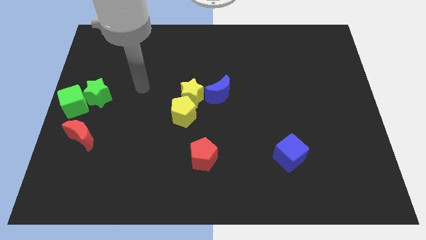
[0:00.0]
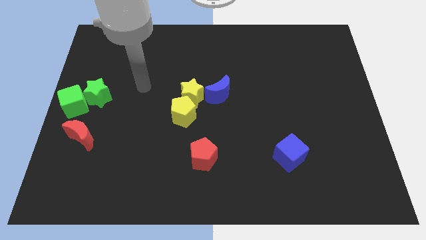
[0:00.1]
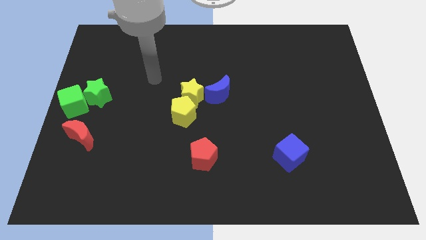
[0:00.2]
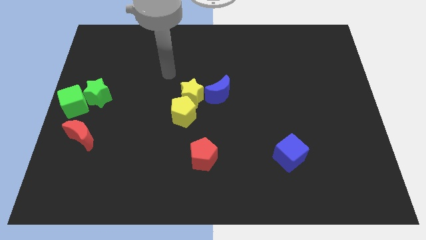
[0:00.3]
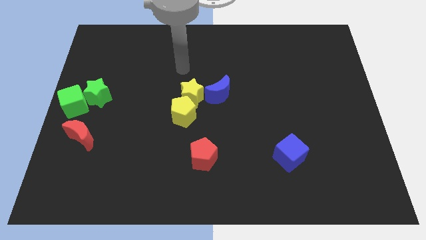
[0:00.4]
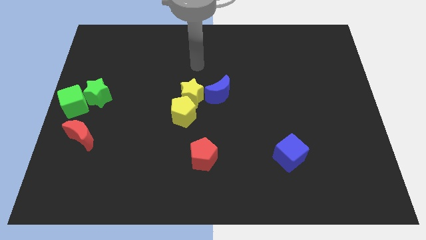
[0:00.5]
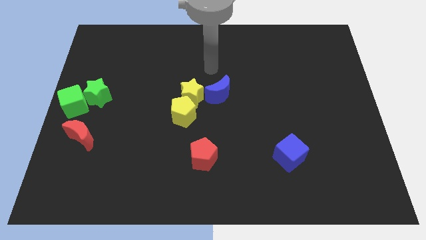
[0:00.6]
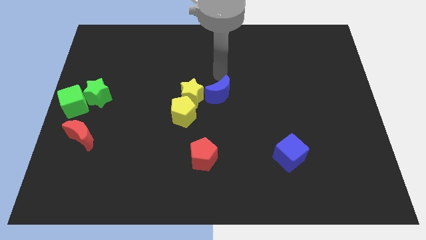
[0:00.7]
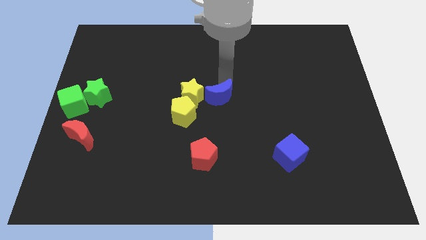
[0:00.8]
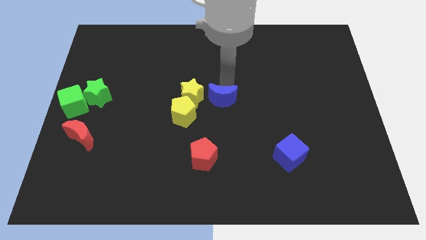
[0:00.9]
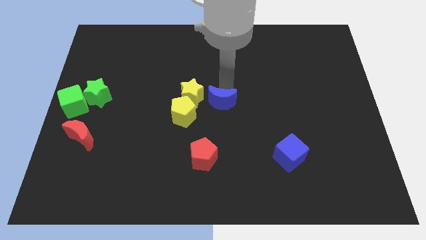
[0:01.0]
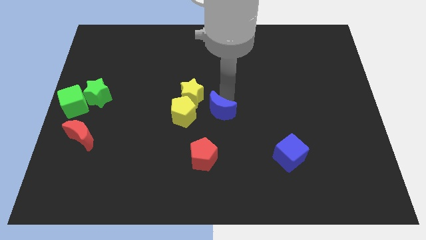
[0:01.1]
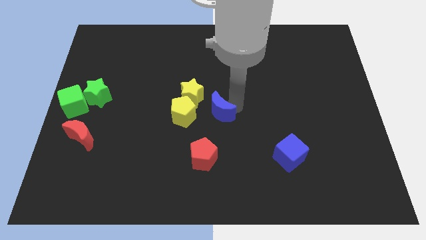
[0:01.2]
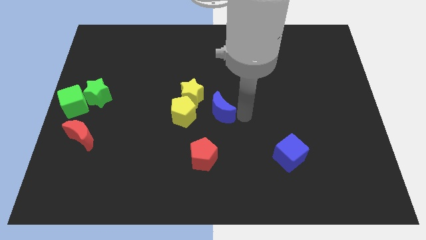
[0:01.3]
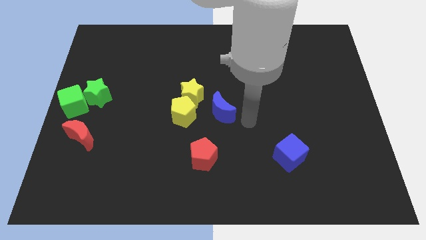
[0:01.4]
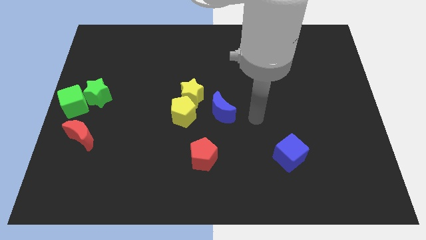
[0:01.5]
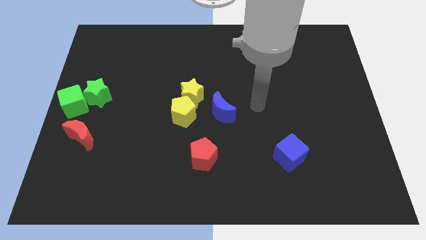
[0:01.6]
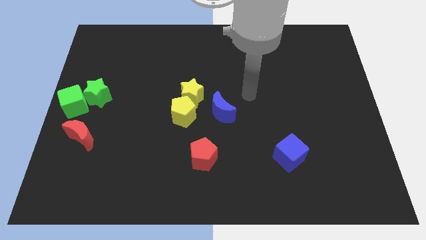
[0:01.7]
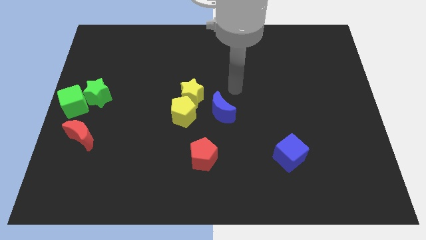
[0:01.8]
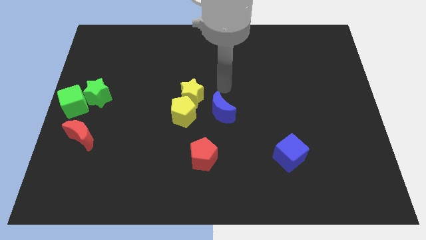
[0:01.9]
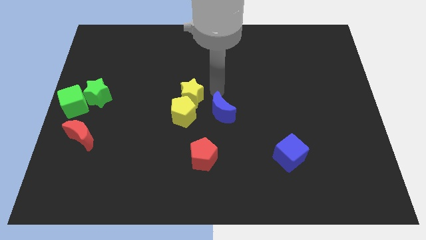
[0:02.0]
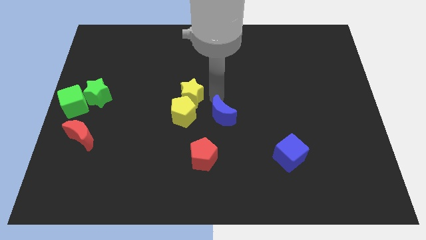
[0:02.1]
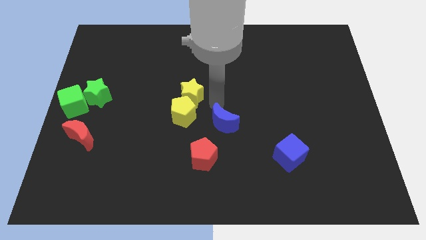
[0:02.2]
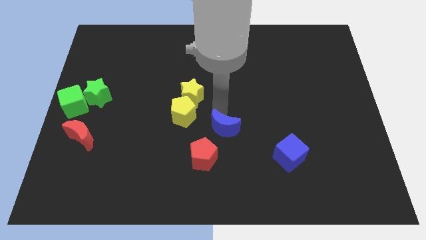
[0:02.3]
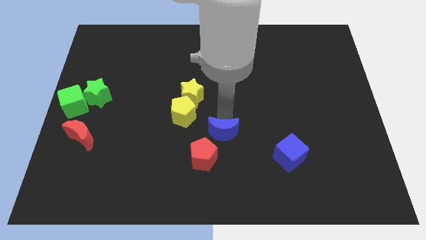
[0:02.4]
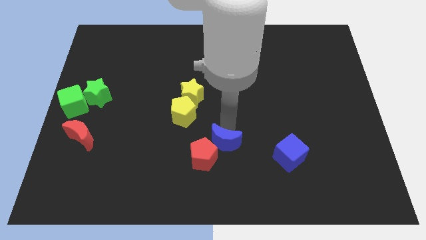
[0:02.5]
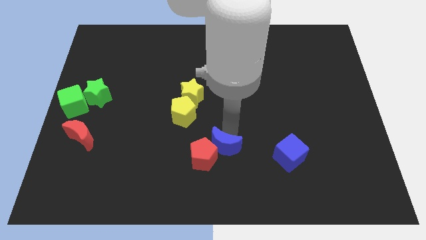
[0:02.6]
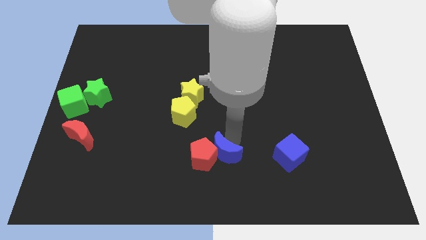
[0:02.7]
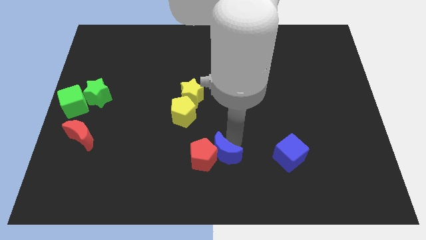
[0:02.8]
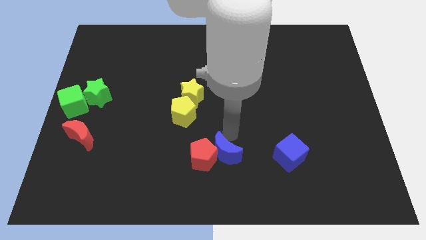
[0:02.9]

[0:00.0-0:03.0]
put the blue moon diagonally top right to the red pentagon

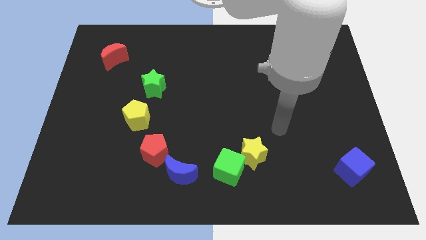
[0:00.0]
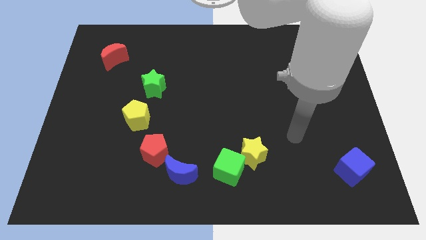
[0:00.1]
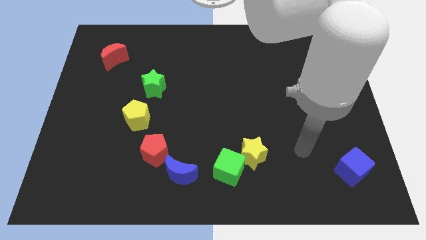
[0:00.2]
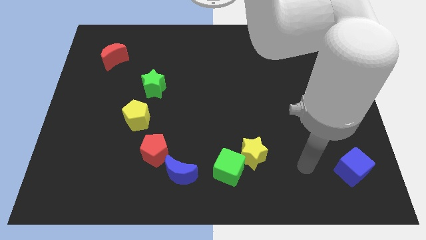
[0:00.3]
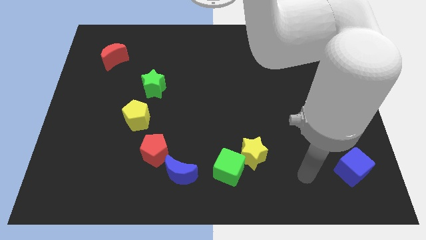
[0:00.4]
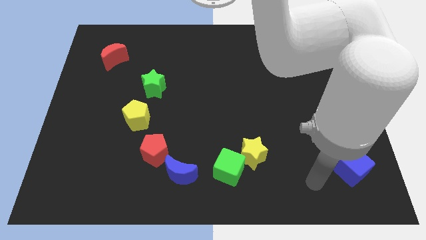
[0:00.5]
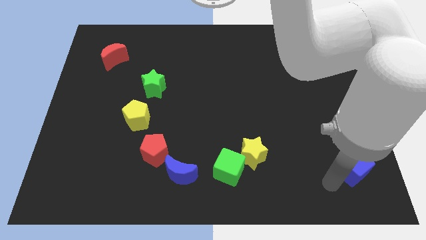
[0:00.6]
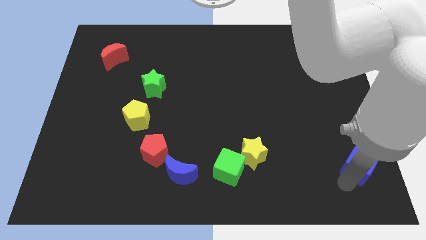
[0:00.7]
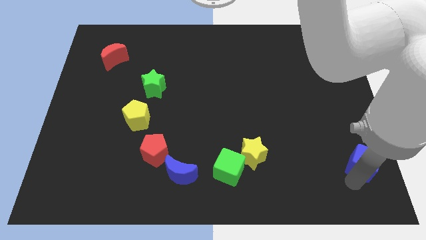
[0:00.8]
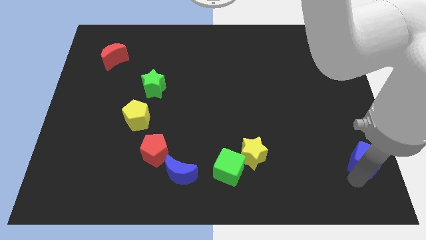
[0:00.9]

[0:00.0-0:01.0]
slightly push the blue cube towards the right side of the board

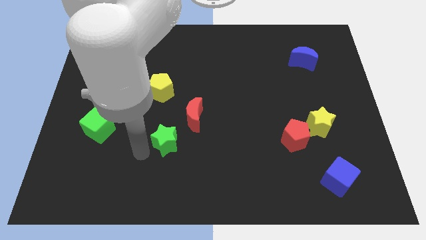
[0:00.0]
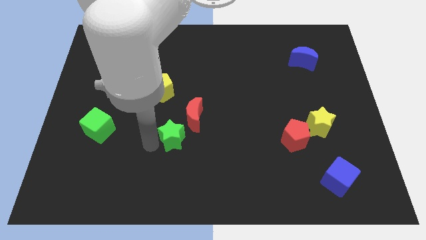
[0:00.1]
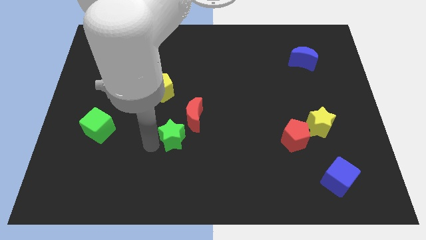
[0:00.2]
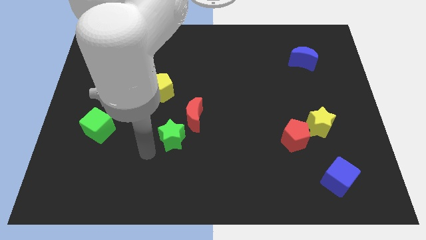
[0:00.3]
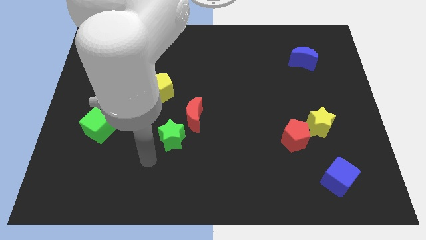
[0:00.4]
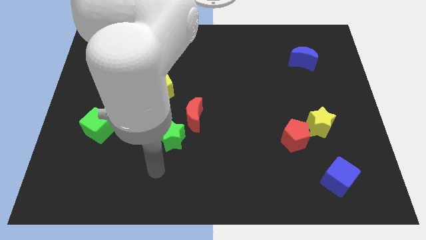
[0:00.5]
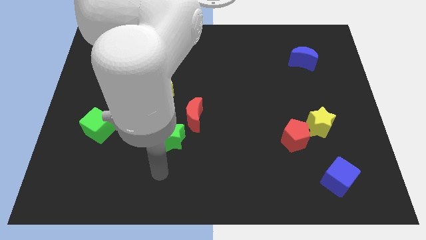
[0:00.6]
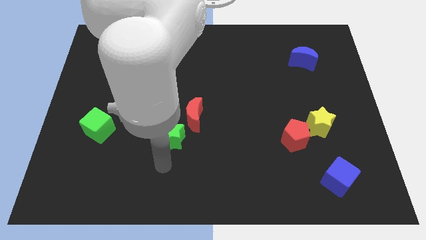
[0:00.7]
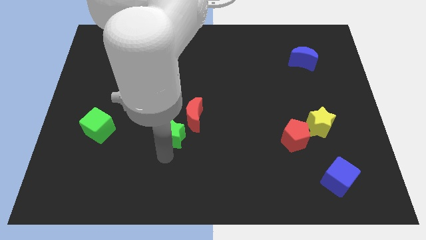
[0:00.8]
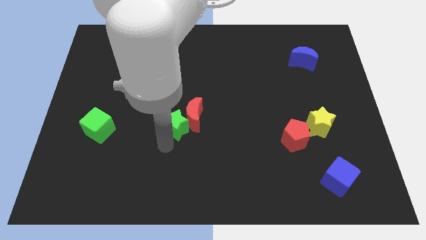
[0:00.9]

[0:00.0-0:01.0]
push the green star into the red crescent

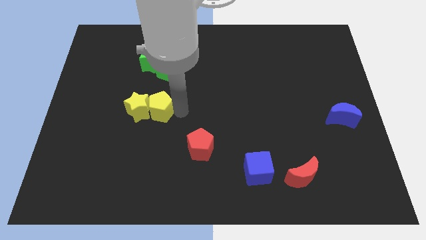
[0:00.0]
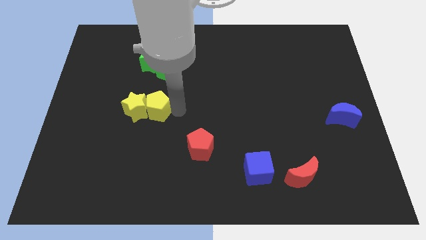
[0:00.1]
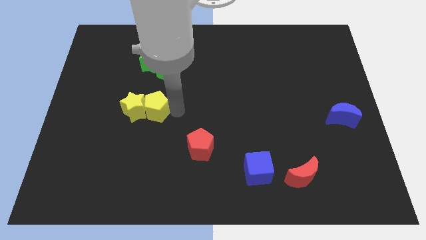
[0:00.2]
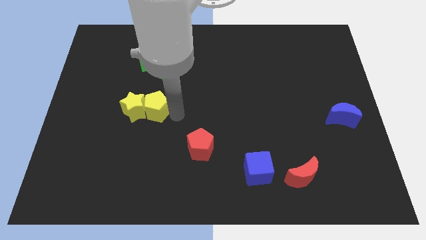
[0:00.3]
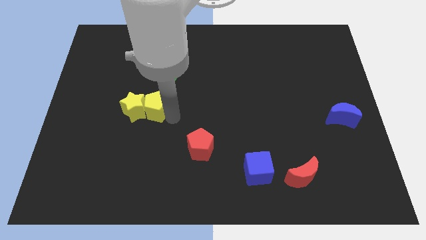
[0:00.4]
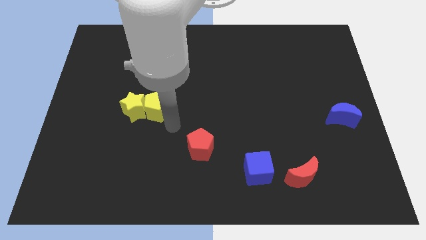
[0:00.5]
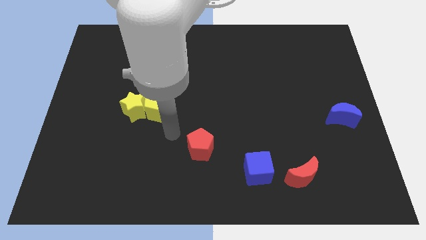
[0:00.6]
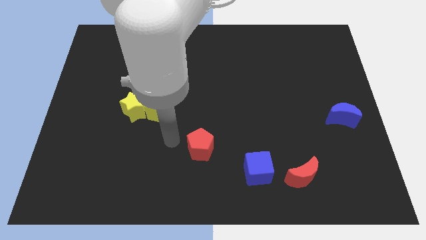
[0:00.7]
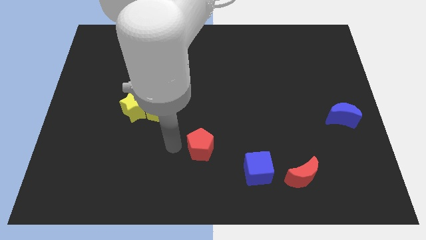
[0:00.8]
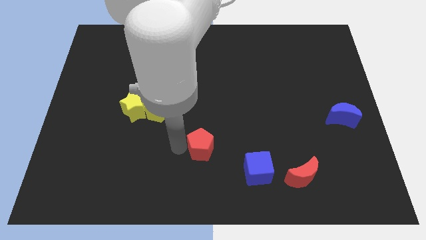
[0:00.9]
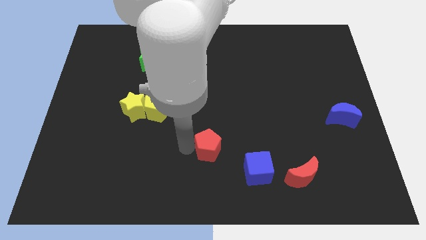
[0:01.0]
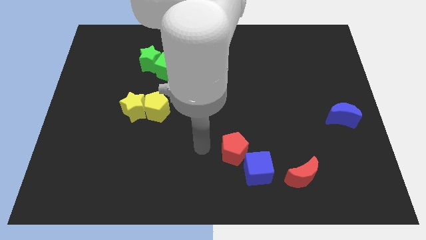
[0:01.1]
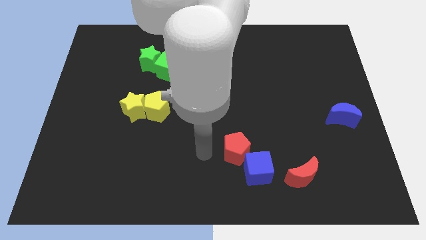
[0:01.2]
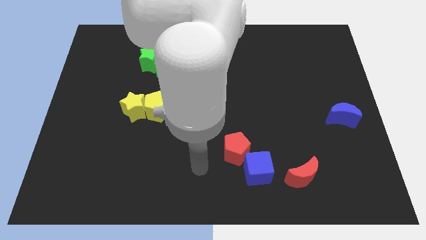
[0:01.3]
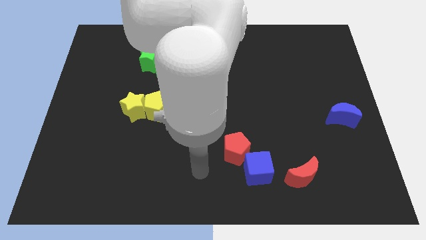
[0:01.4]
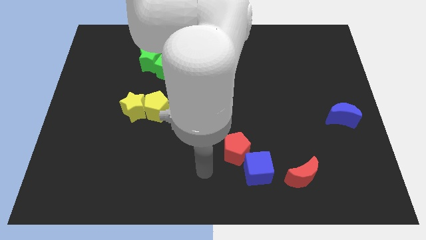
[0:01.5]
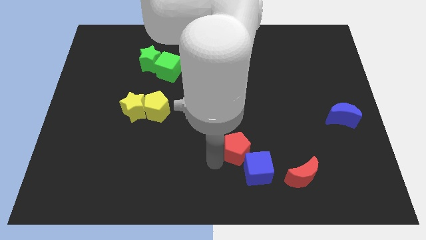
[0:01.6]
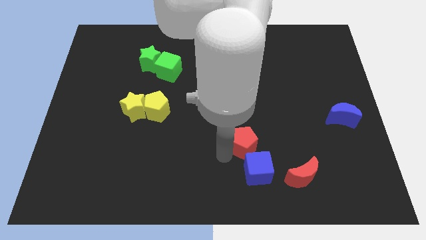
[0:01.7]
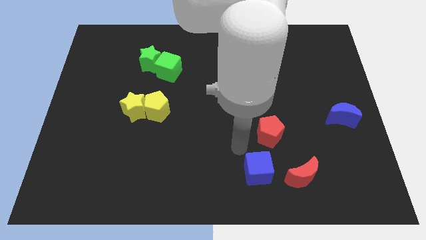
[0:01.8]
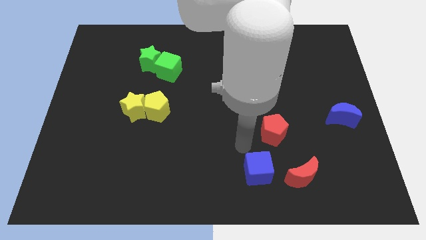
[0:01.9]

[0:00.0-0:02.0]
slide the red pentagon diagonally to green cube

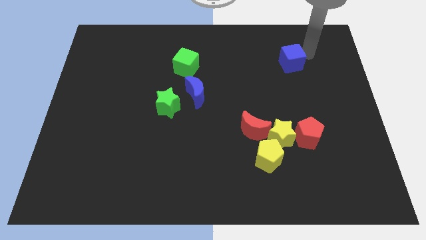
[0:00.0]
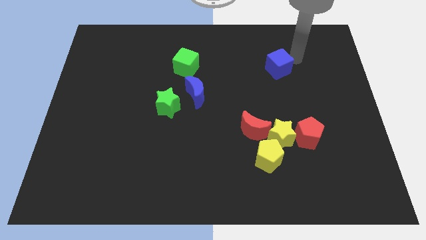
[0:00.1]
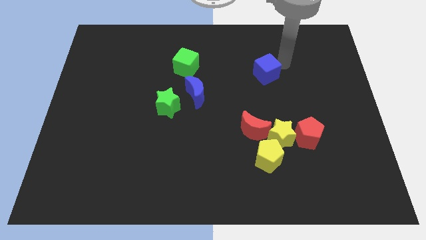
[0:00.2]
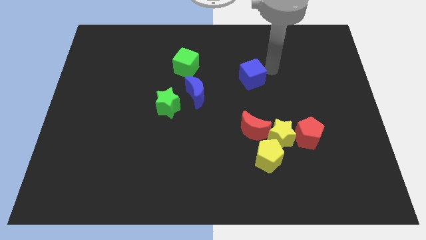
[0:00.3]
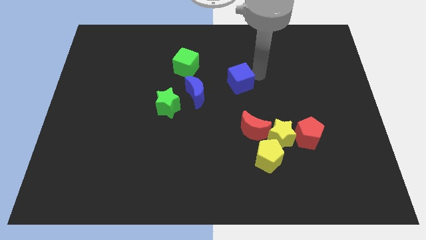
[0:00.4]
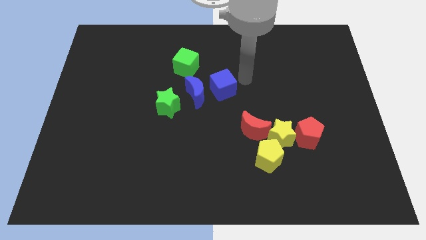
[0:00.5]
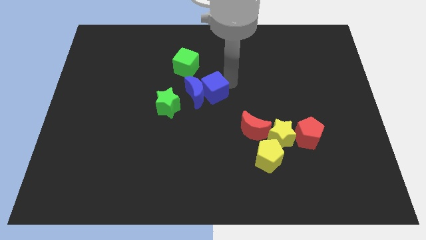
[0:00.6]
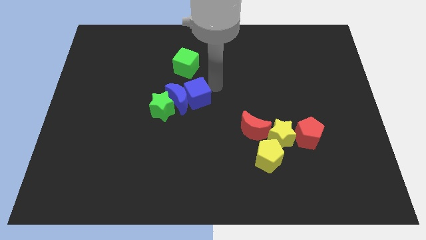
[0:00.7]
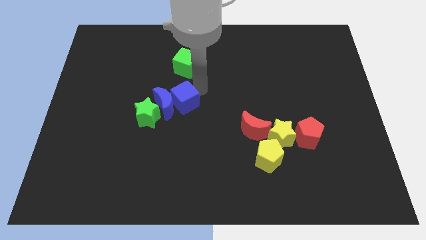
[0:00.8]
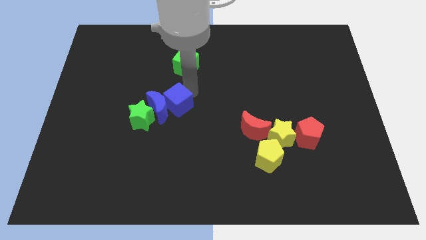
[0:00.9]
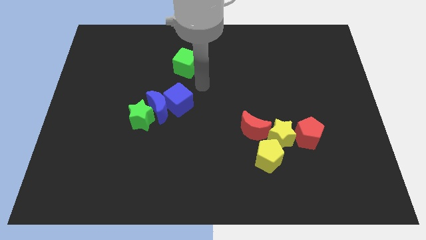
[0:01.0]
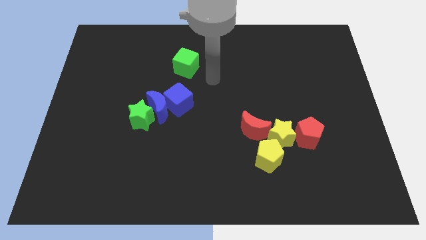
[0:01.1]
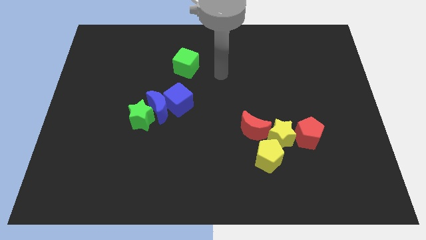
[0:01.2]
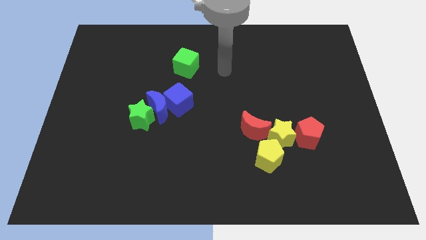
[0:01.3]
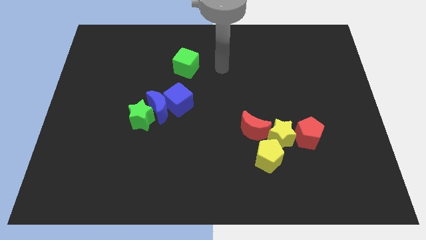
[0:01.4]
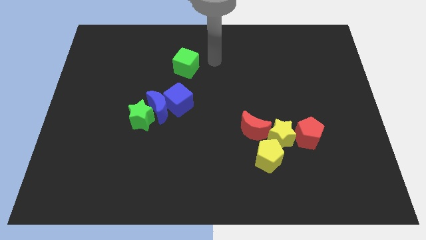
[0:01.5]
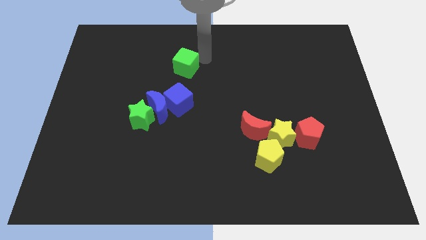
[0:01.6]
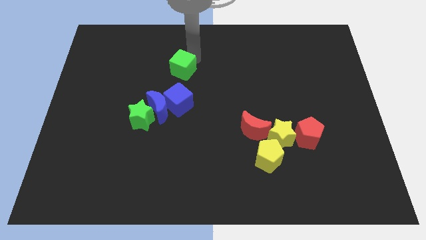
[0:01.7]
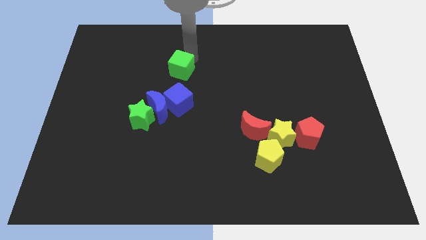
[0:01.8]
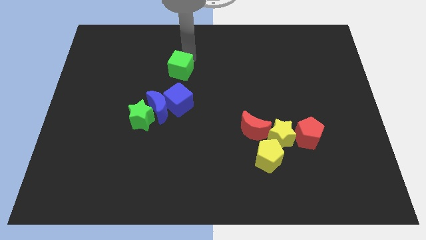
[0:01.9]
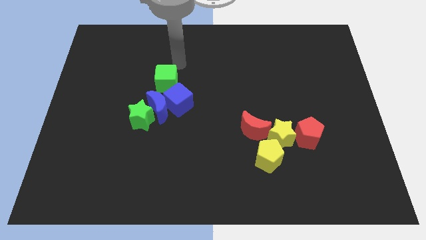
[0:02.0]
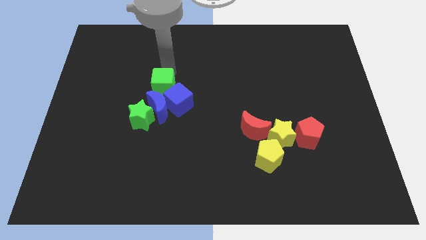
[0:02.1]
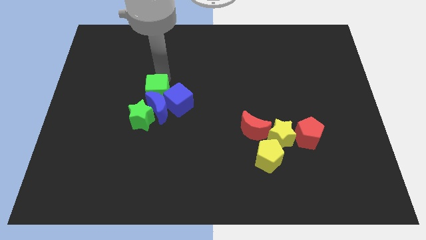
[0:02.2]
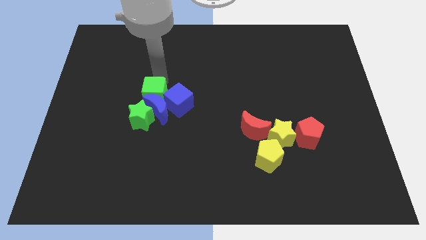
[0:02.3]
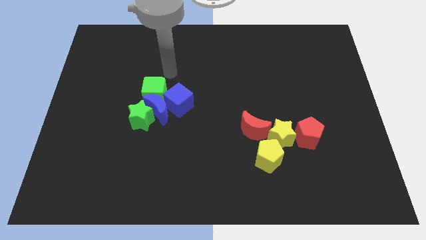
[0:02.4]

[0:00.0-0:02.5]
push the blue cube into the blue moon
